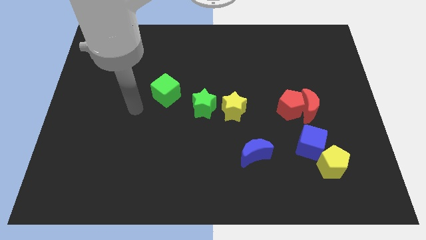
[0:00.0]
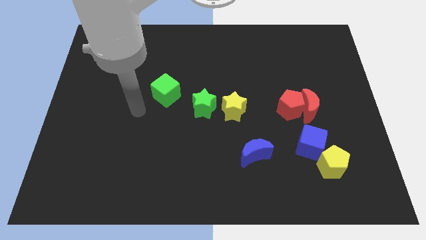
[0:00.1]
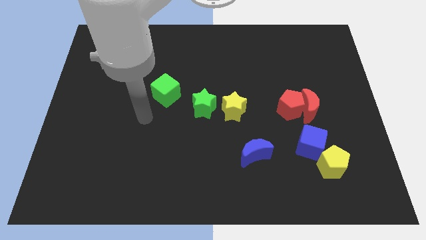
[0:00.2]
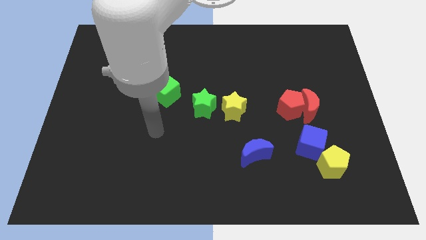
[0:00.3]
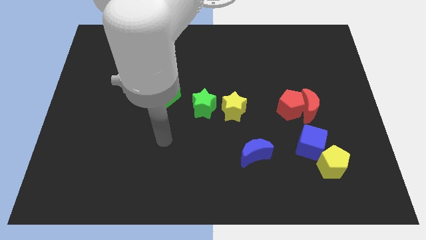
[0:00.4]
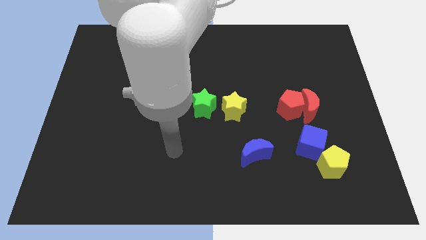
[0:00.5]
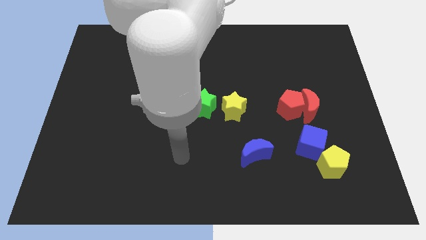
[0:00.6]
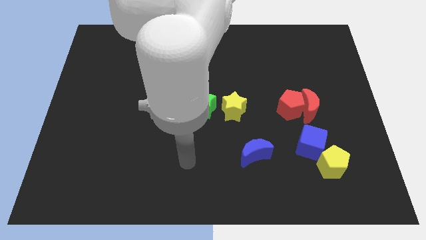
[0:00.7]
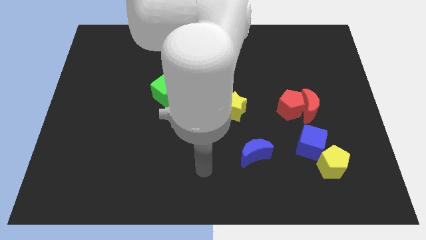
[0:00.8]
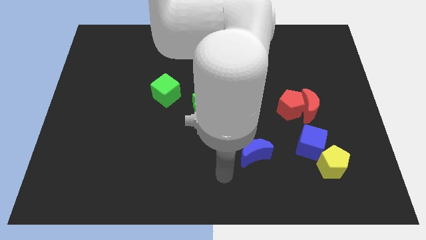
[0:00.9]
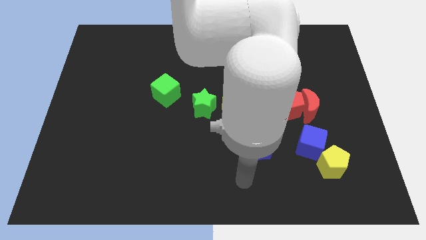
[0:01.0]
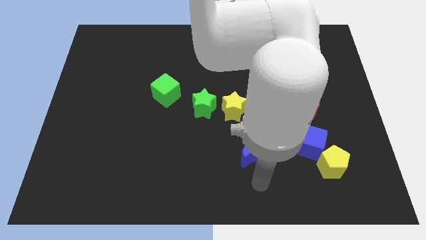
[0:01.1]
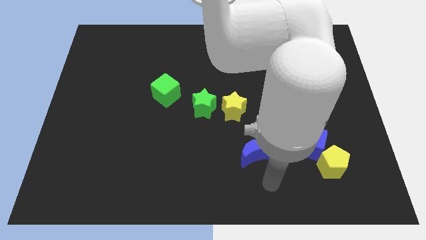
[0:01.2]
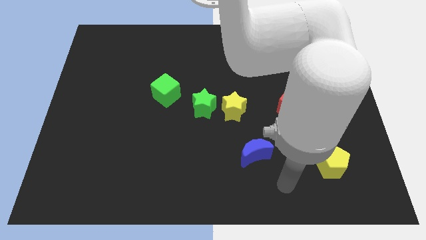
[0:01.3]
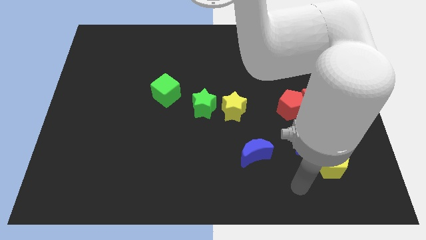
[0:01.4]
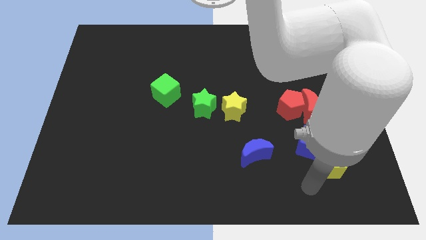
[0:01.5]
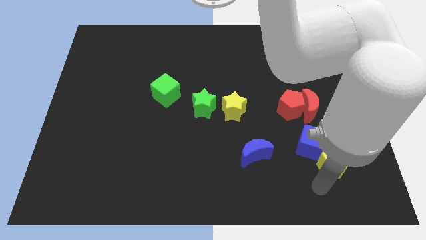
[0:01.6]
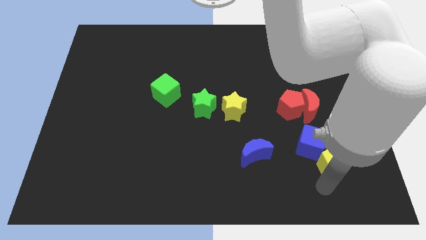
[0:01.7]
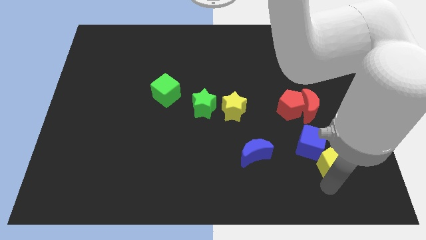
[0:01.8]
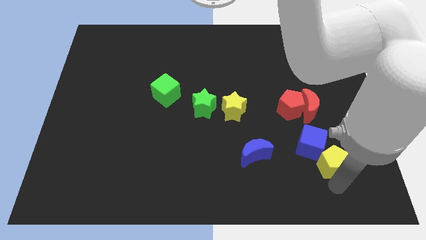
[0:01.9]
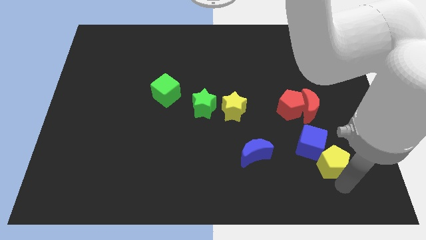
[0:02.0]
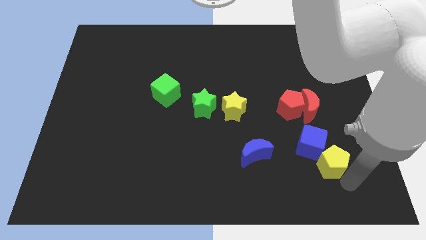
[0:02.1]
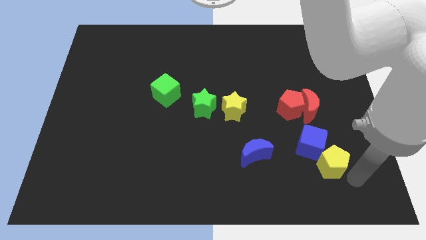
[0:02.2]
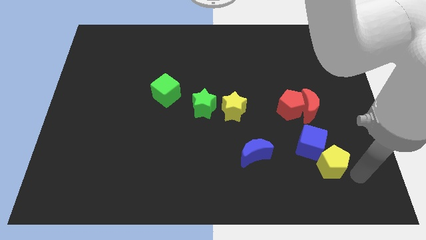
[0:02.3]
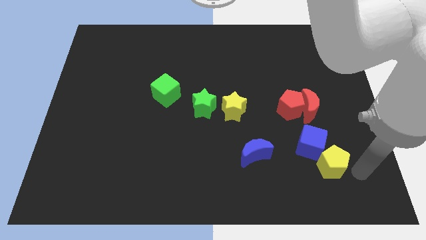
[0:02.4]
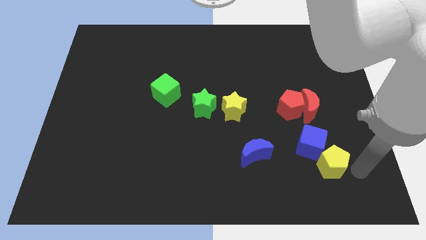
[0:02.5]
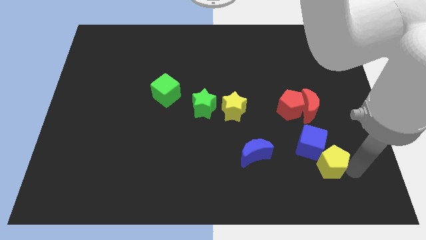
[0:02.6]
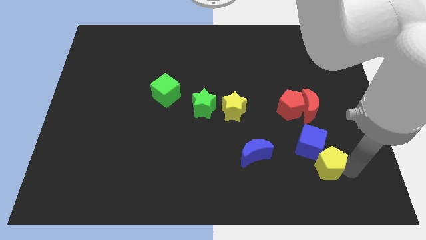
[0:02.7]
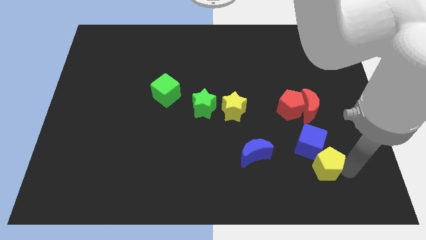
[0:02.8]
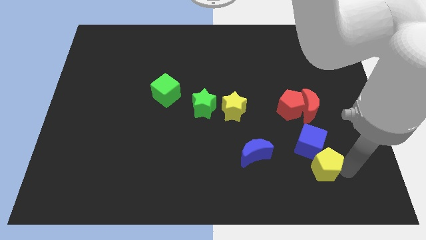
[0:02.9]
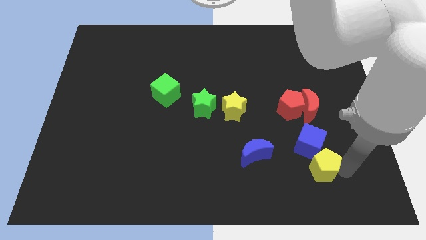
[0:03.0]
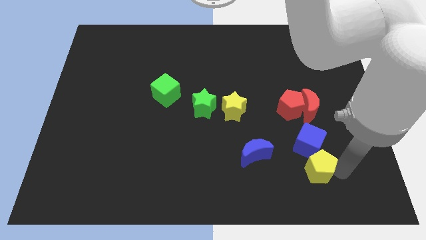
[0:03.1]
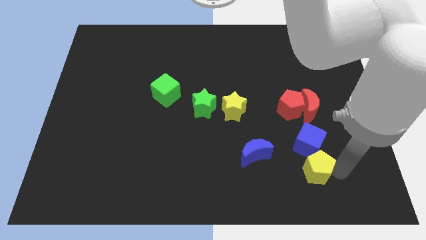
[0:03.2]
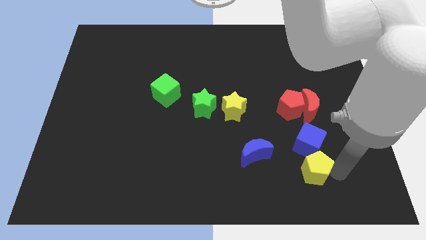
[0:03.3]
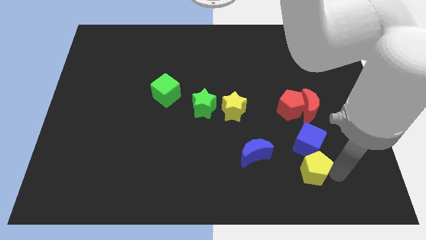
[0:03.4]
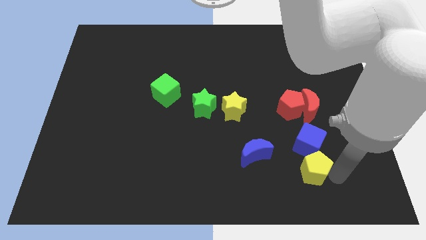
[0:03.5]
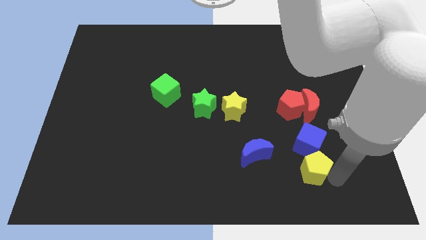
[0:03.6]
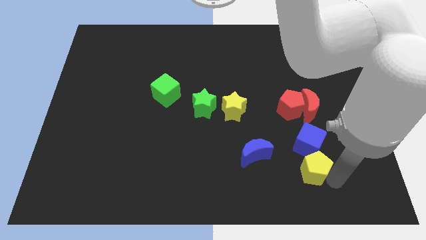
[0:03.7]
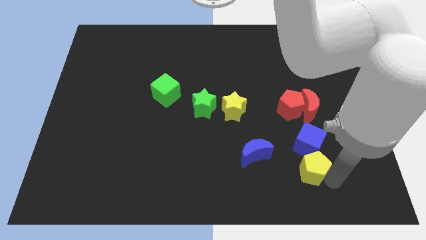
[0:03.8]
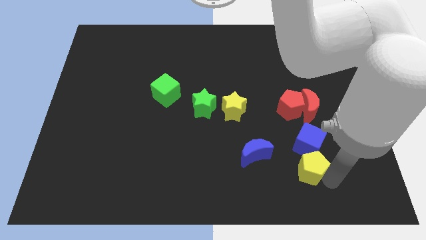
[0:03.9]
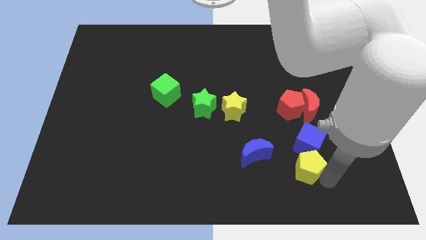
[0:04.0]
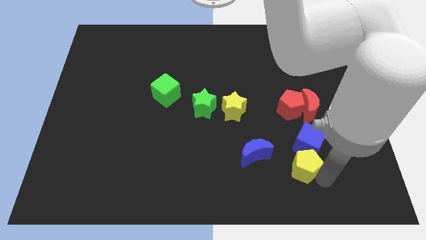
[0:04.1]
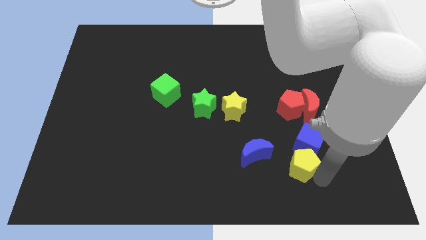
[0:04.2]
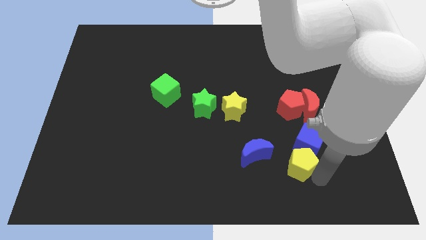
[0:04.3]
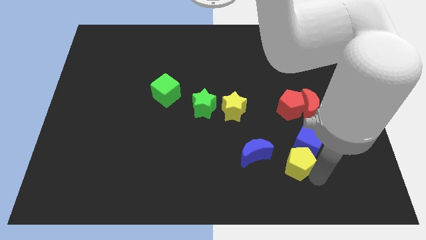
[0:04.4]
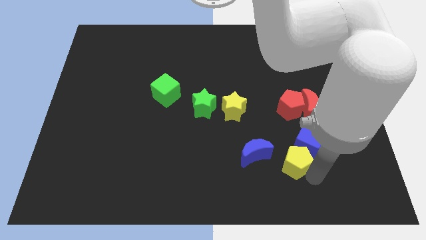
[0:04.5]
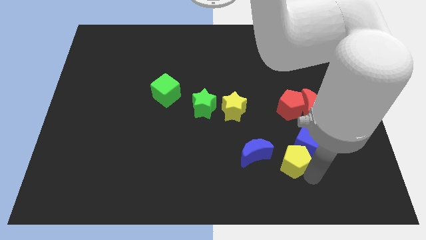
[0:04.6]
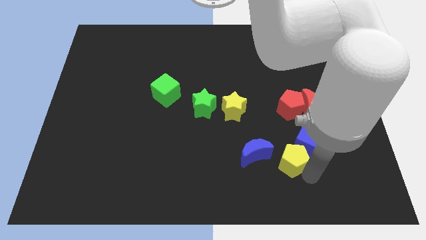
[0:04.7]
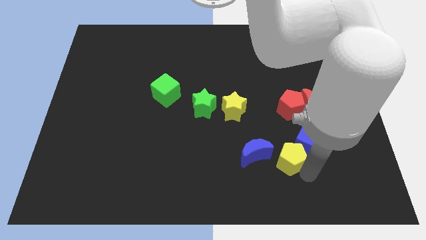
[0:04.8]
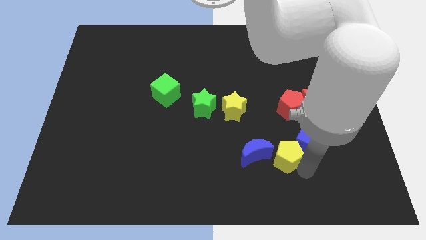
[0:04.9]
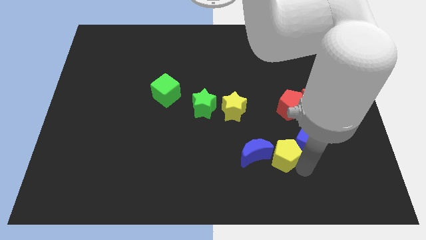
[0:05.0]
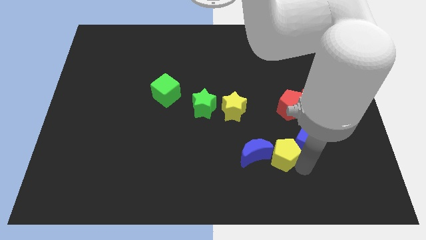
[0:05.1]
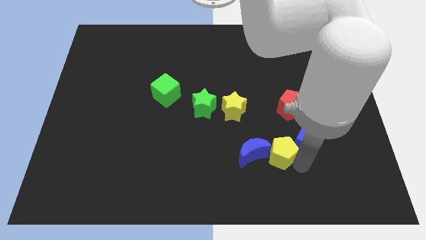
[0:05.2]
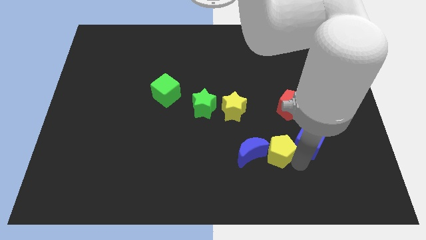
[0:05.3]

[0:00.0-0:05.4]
slide the yellow pentagon next to the blue moon

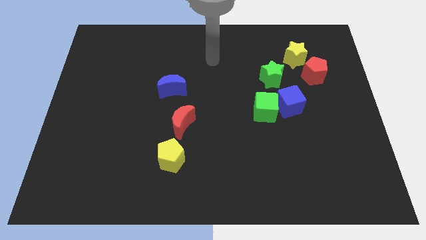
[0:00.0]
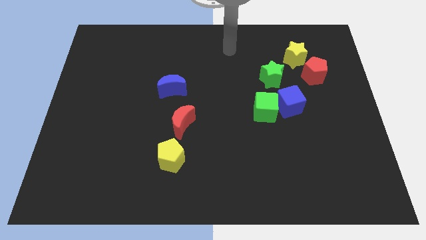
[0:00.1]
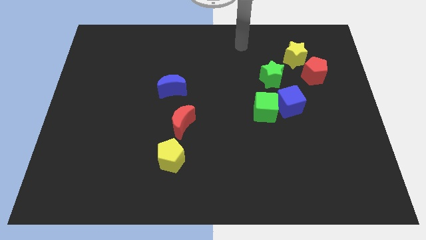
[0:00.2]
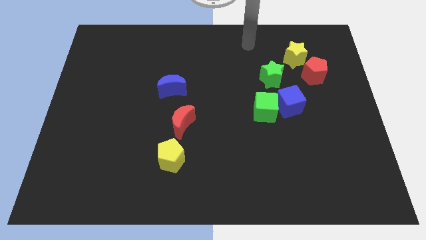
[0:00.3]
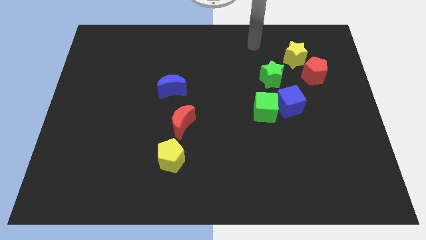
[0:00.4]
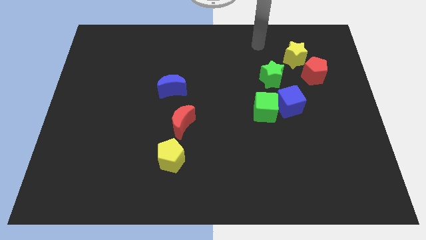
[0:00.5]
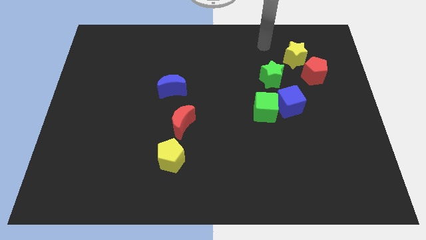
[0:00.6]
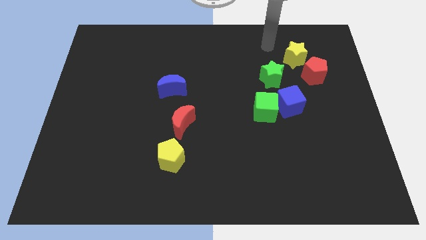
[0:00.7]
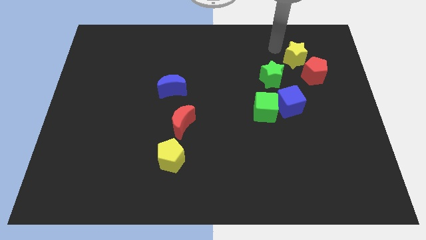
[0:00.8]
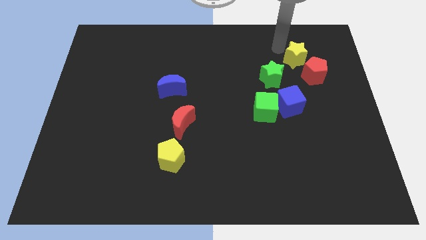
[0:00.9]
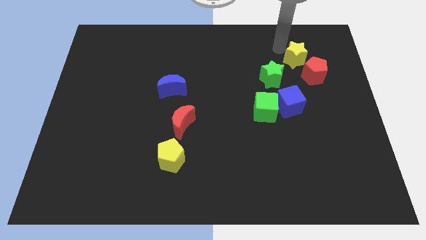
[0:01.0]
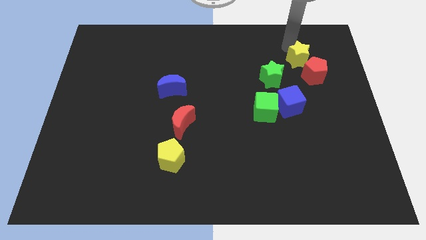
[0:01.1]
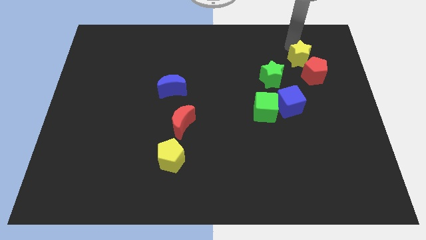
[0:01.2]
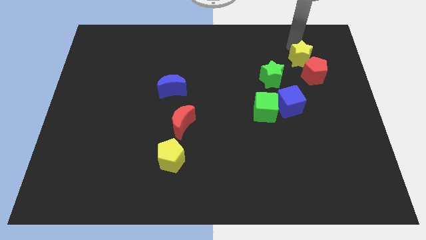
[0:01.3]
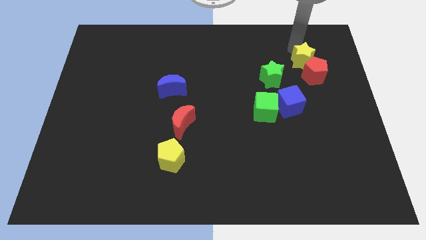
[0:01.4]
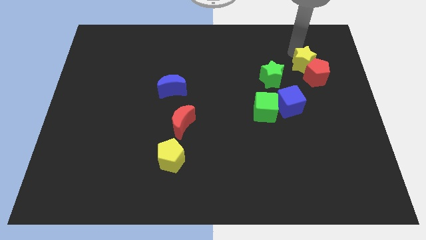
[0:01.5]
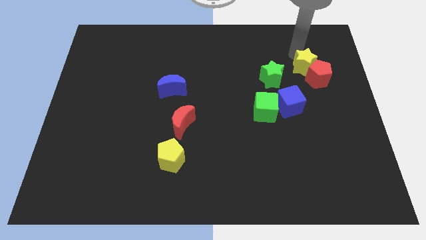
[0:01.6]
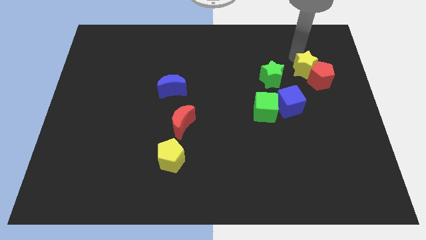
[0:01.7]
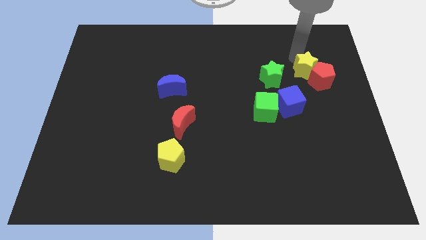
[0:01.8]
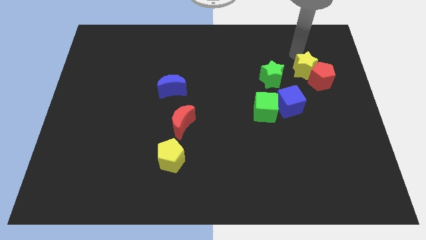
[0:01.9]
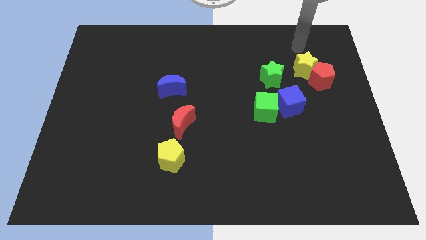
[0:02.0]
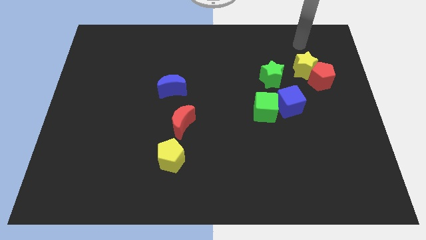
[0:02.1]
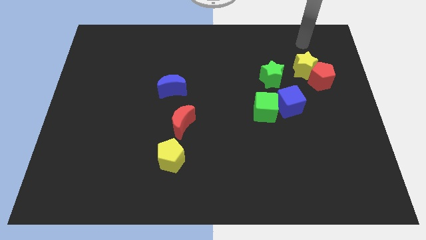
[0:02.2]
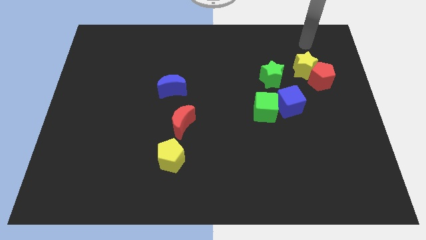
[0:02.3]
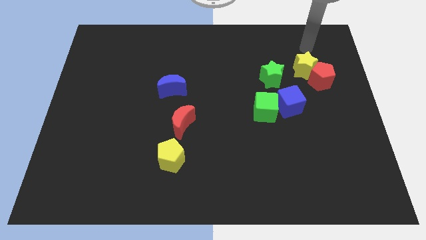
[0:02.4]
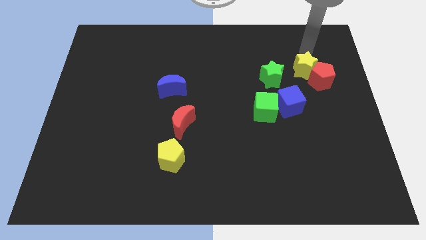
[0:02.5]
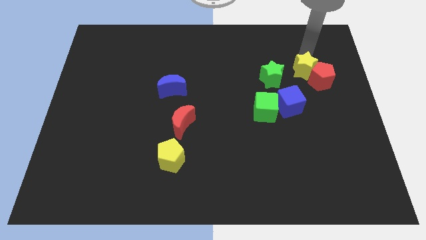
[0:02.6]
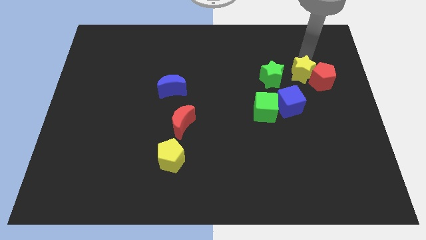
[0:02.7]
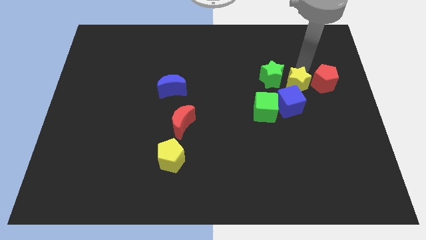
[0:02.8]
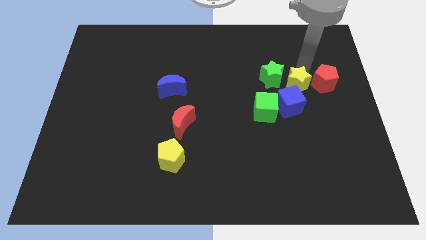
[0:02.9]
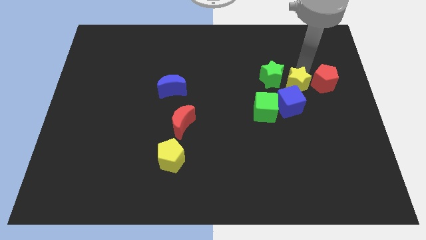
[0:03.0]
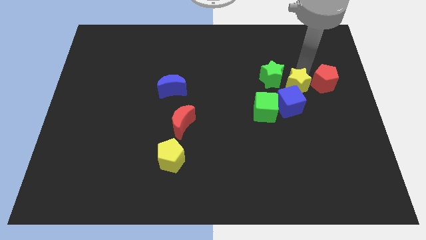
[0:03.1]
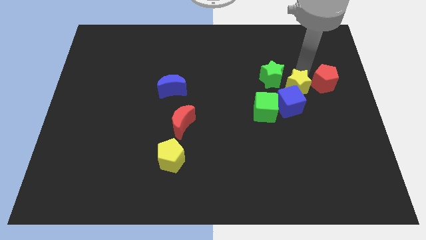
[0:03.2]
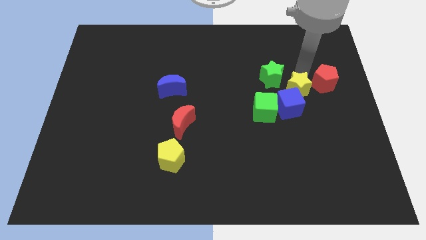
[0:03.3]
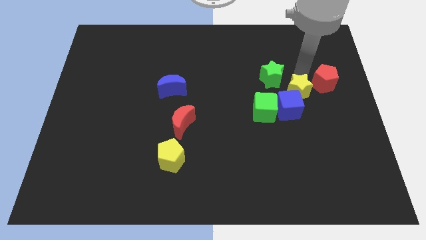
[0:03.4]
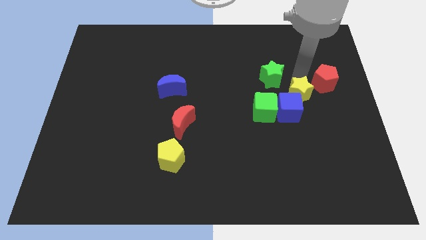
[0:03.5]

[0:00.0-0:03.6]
move the yellow star close to the blue cube
